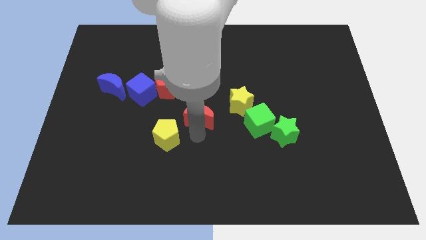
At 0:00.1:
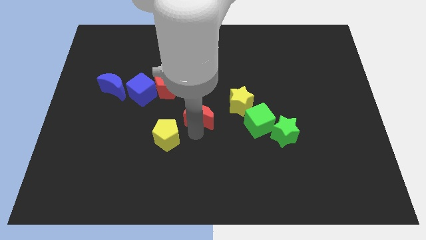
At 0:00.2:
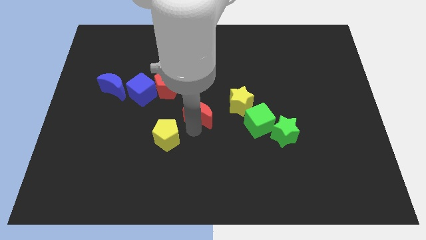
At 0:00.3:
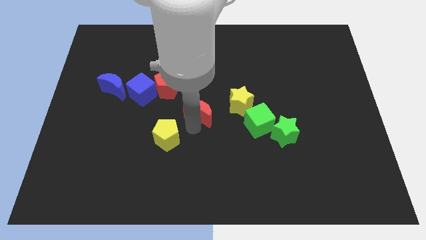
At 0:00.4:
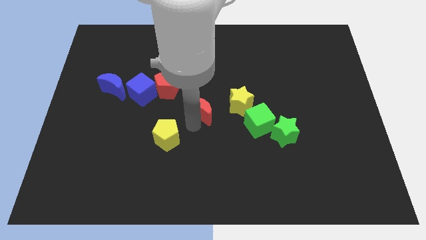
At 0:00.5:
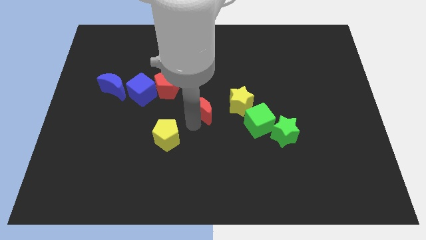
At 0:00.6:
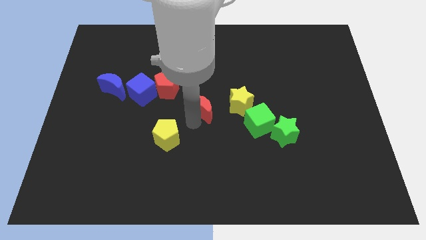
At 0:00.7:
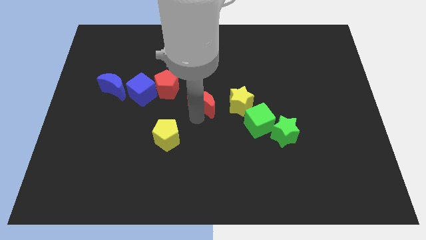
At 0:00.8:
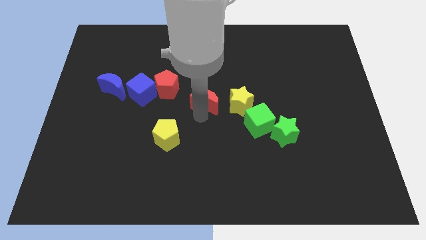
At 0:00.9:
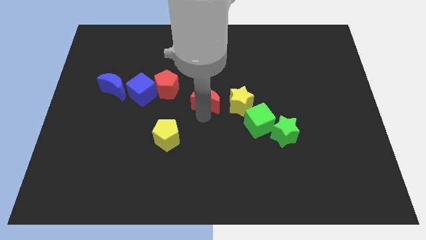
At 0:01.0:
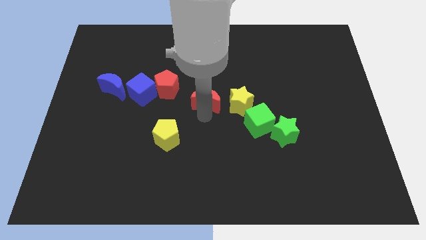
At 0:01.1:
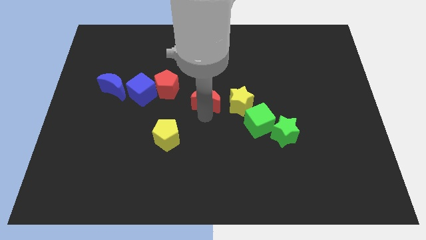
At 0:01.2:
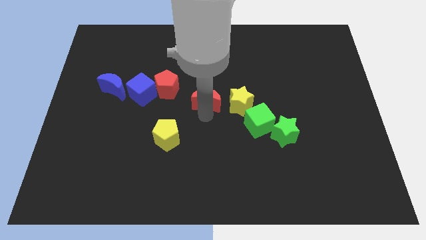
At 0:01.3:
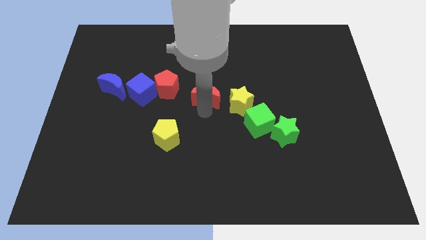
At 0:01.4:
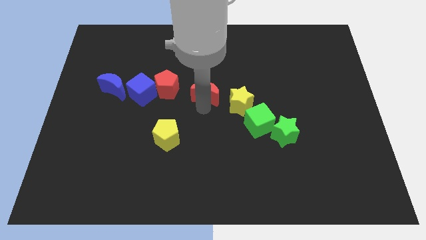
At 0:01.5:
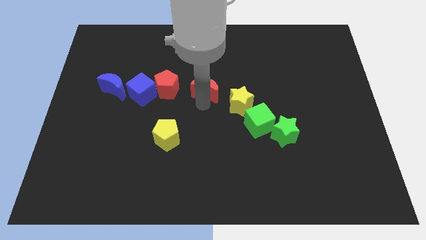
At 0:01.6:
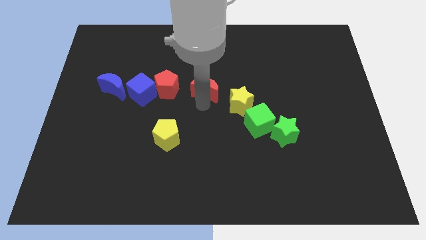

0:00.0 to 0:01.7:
move red crescent in between red pentagon and yellow star

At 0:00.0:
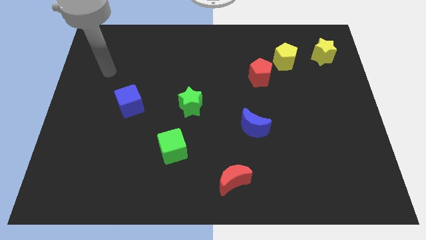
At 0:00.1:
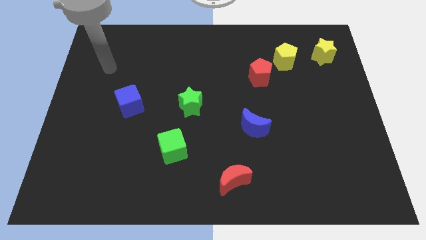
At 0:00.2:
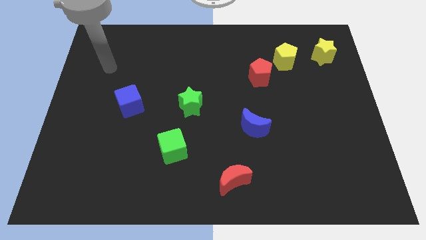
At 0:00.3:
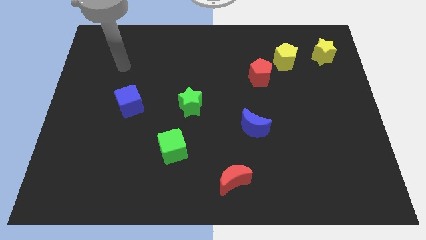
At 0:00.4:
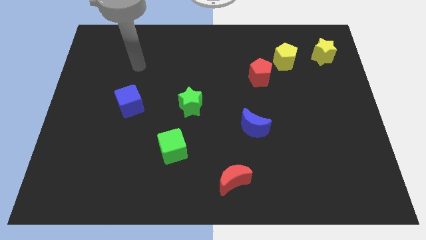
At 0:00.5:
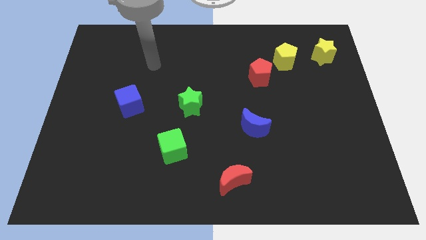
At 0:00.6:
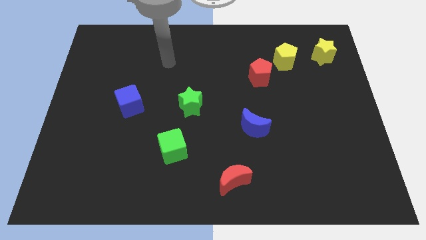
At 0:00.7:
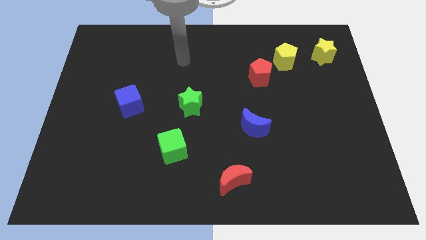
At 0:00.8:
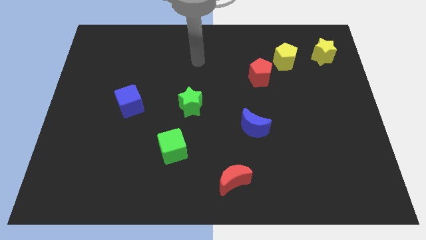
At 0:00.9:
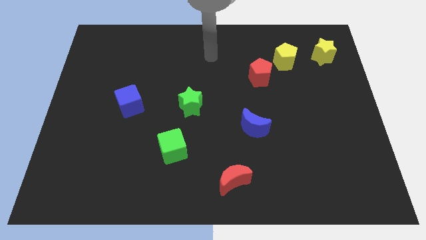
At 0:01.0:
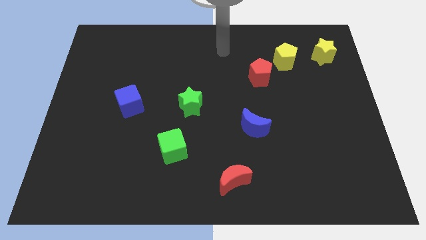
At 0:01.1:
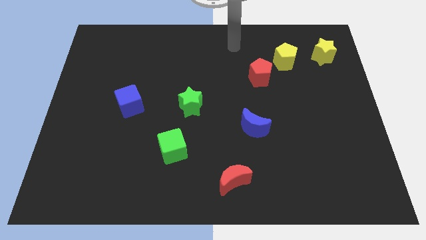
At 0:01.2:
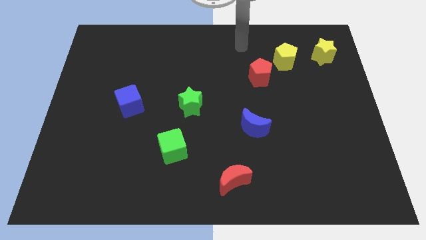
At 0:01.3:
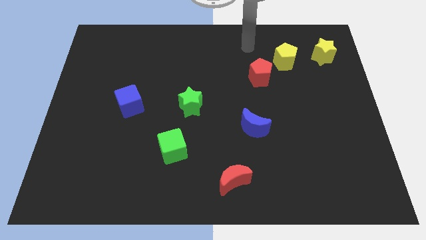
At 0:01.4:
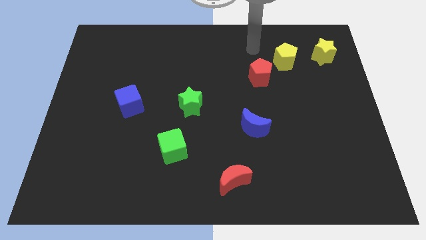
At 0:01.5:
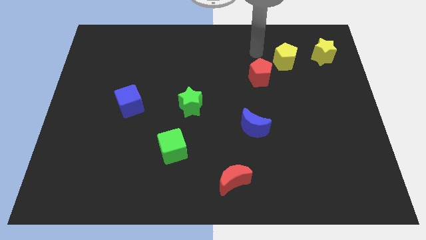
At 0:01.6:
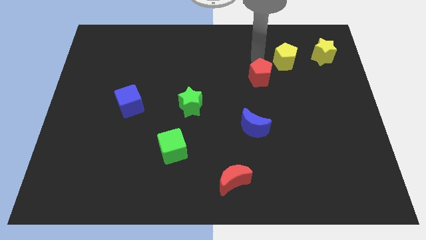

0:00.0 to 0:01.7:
place the arm above the red pentagon

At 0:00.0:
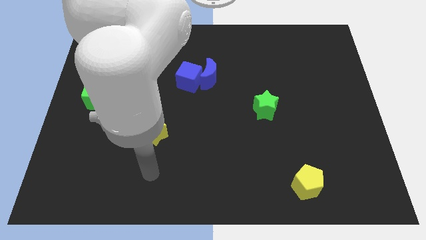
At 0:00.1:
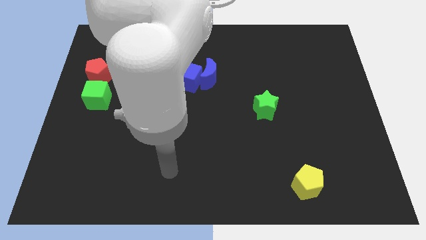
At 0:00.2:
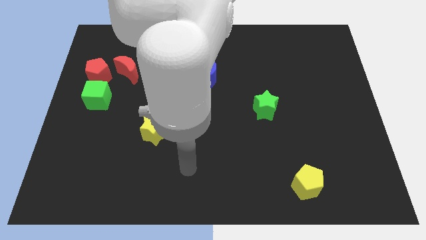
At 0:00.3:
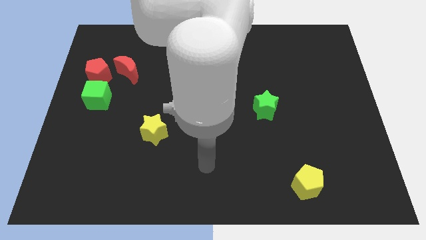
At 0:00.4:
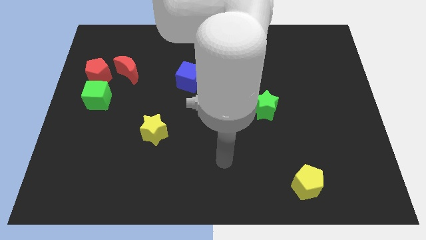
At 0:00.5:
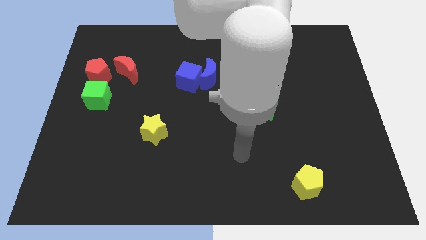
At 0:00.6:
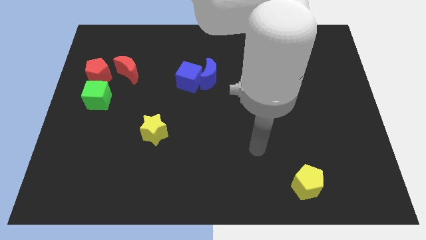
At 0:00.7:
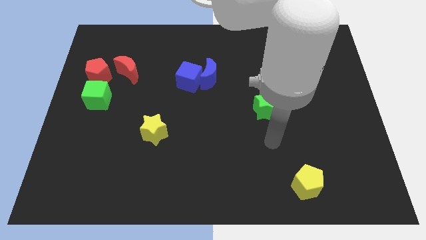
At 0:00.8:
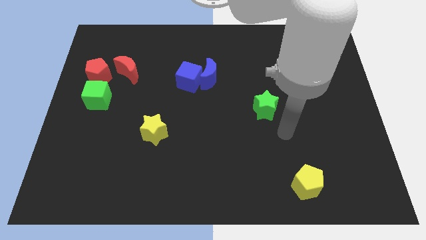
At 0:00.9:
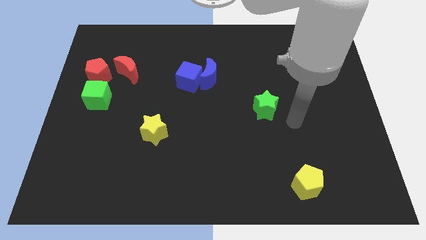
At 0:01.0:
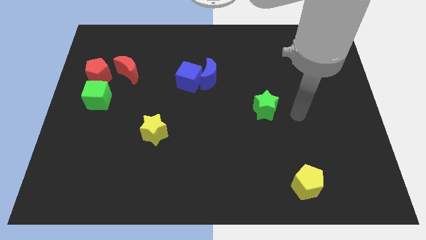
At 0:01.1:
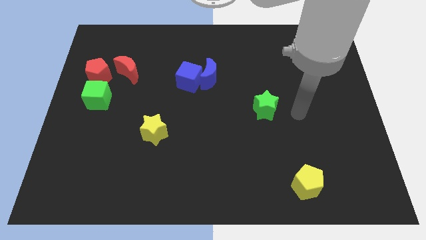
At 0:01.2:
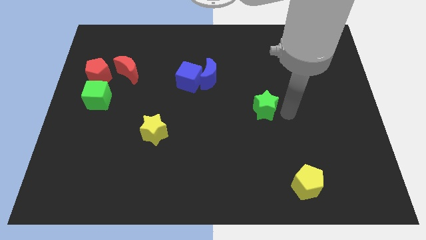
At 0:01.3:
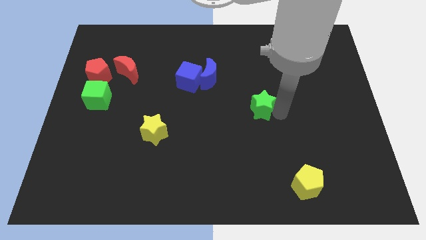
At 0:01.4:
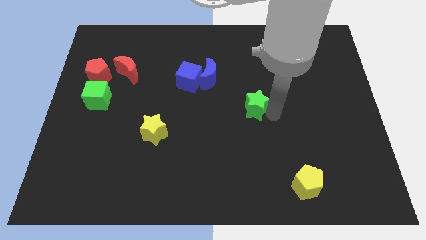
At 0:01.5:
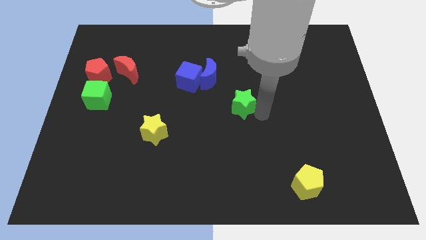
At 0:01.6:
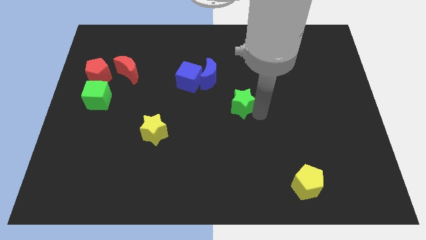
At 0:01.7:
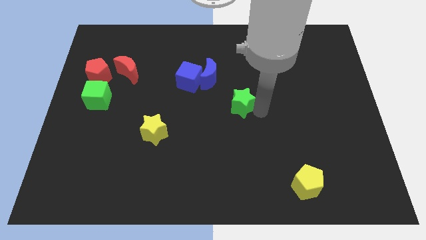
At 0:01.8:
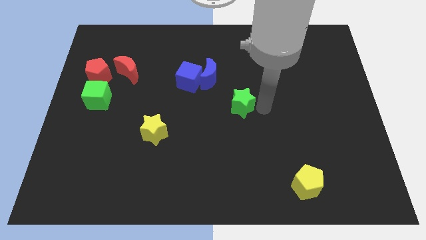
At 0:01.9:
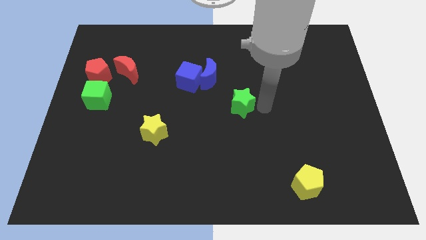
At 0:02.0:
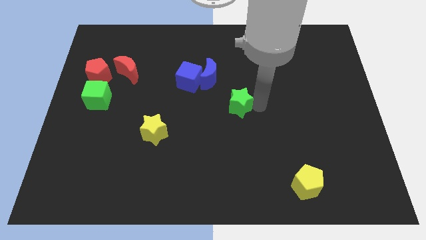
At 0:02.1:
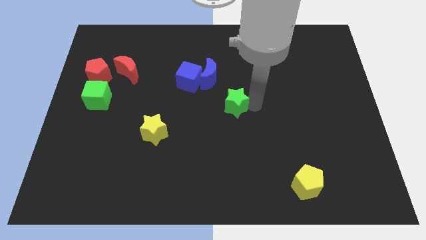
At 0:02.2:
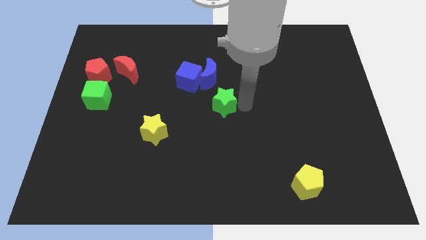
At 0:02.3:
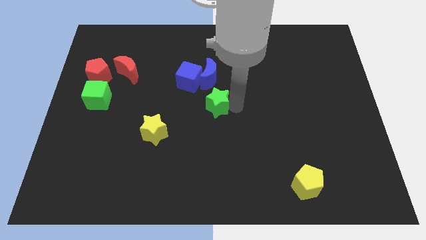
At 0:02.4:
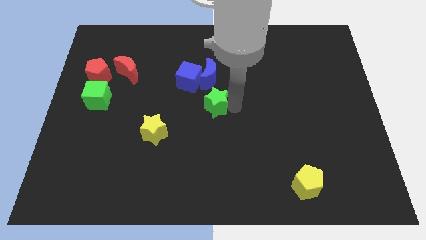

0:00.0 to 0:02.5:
push the green star to the center of the board

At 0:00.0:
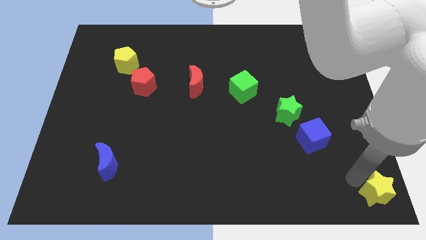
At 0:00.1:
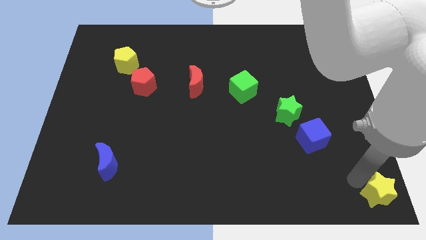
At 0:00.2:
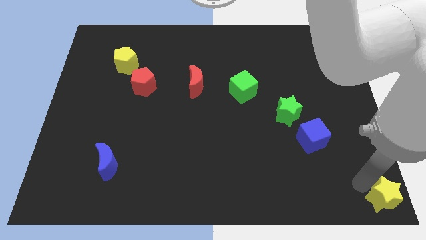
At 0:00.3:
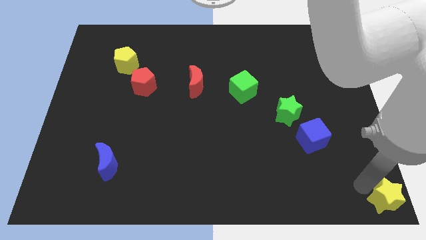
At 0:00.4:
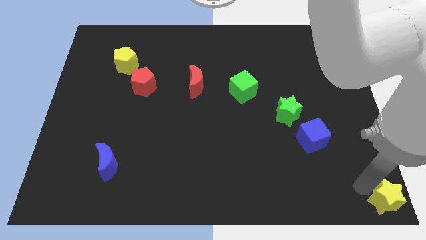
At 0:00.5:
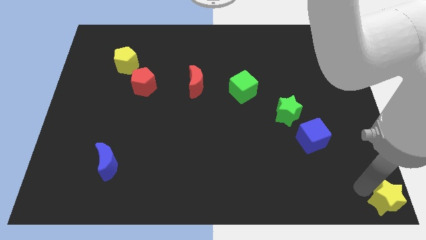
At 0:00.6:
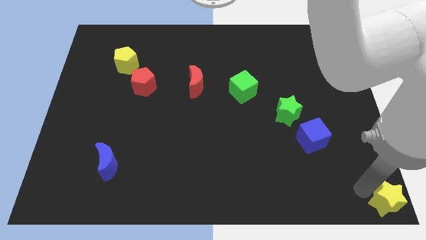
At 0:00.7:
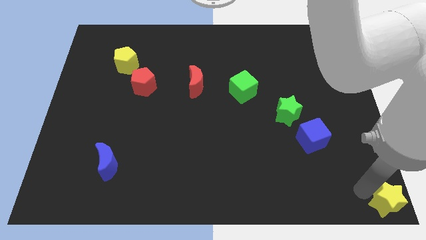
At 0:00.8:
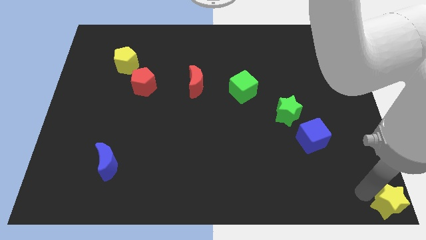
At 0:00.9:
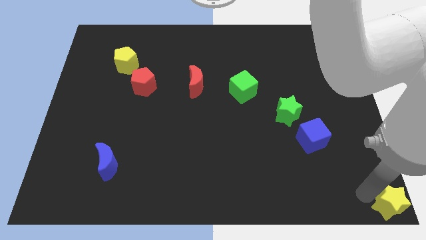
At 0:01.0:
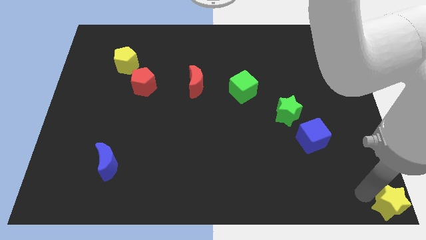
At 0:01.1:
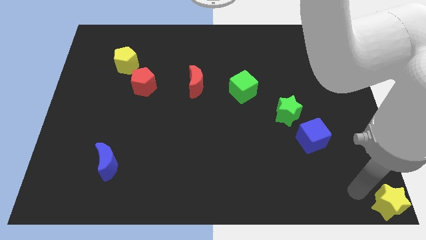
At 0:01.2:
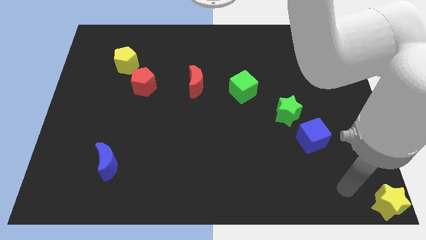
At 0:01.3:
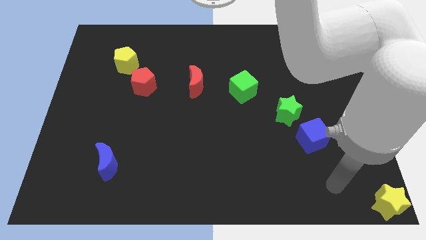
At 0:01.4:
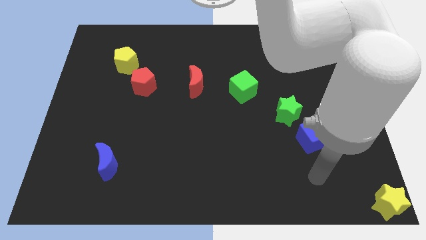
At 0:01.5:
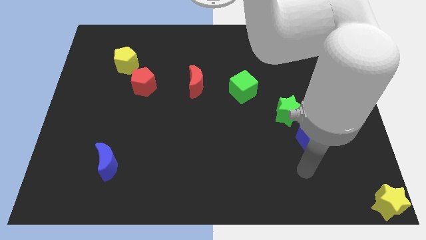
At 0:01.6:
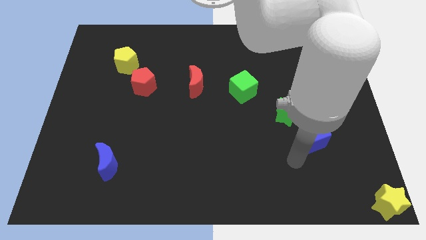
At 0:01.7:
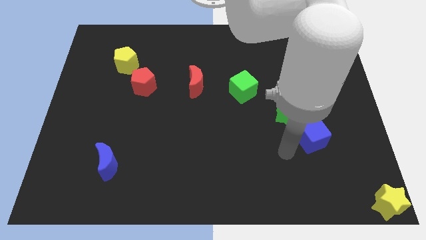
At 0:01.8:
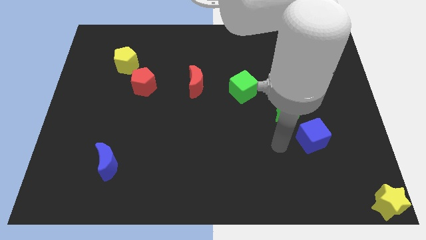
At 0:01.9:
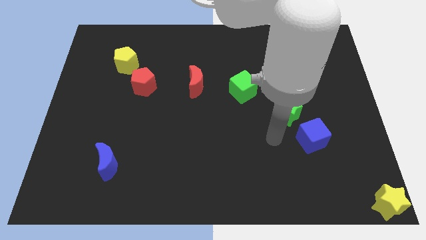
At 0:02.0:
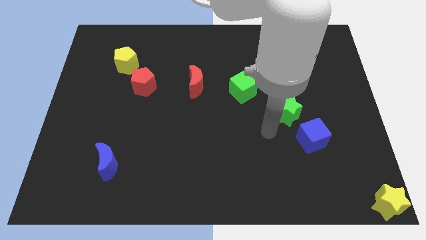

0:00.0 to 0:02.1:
move the yellow star to the bottom right corner of the board

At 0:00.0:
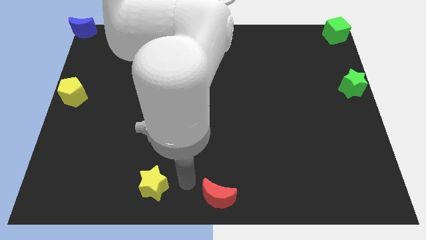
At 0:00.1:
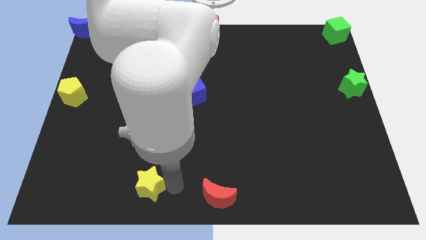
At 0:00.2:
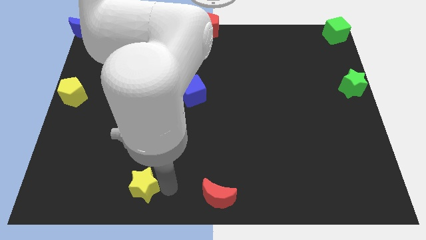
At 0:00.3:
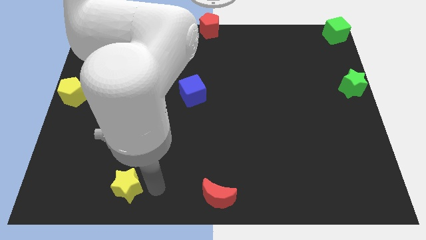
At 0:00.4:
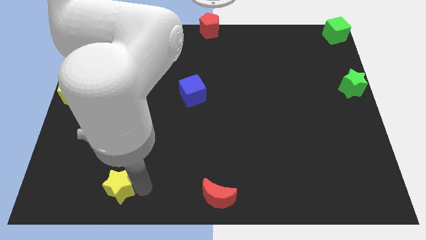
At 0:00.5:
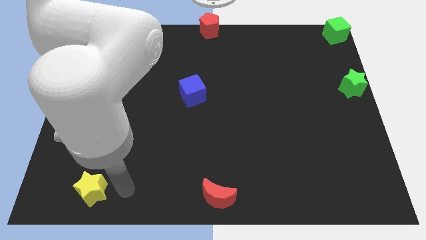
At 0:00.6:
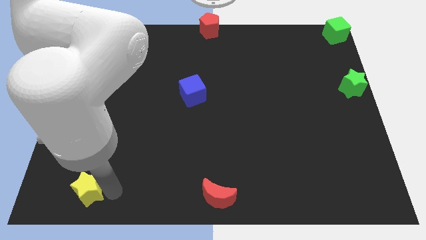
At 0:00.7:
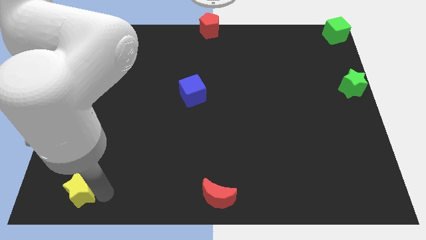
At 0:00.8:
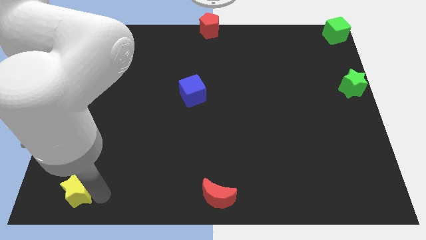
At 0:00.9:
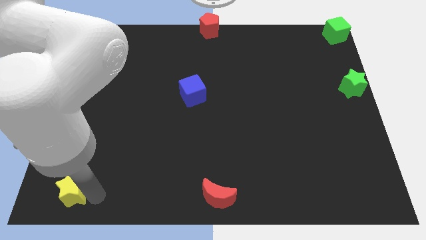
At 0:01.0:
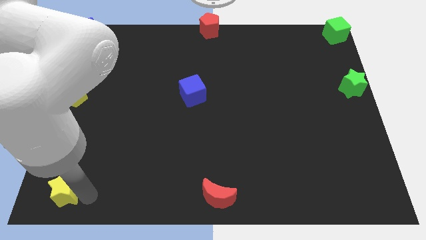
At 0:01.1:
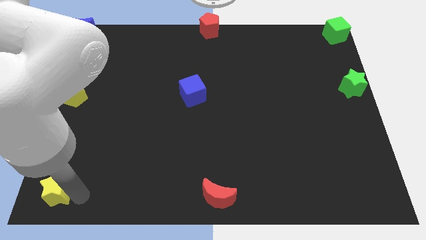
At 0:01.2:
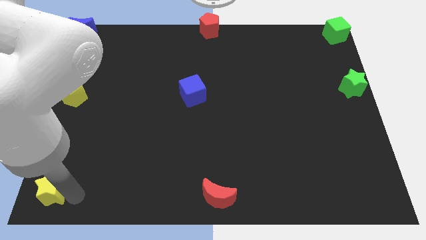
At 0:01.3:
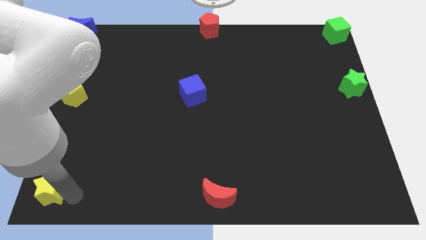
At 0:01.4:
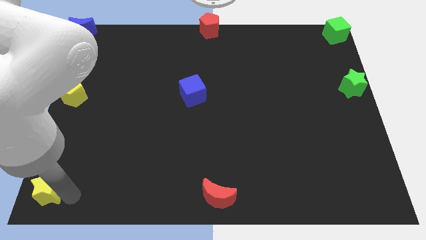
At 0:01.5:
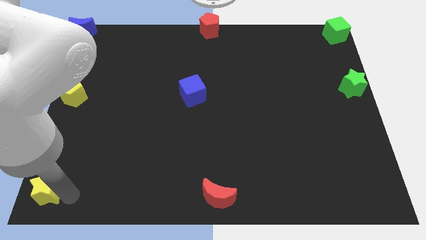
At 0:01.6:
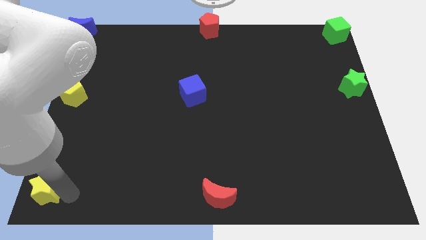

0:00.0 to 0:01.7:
move the yellow star to the bottom left corner of the board
